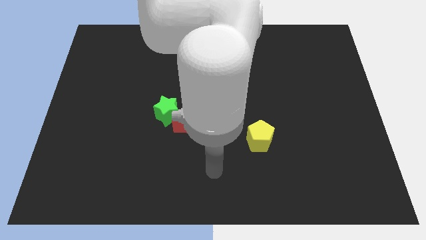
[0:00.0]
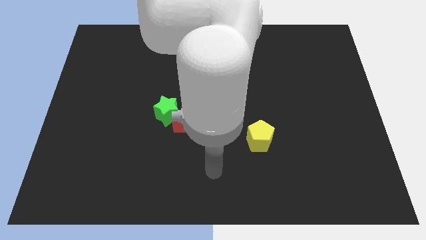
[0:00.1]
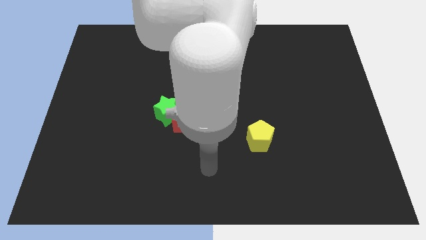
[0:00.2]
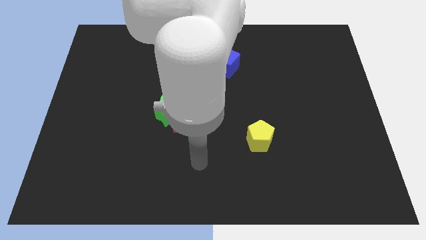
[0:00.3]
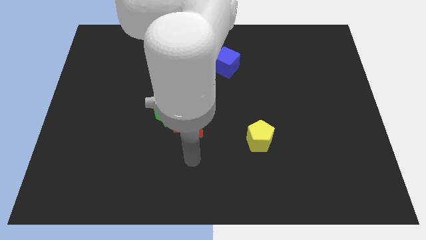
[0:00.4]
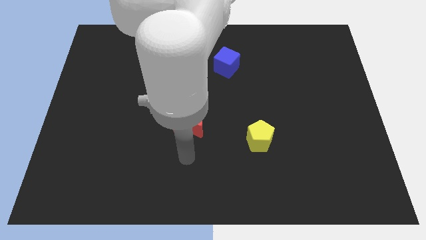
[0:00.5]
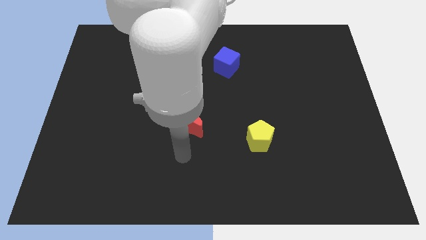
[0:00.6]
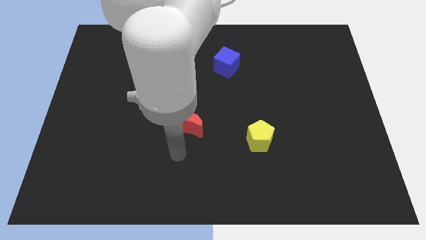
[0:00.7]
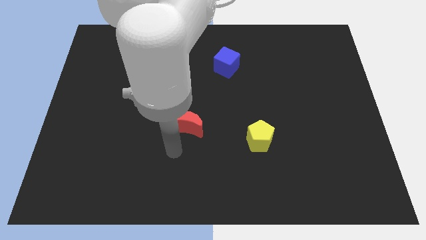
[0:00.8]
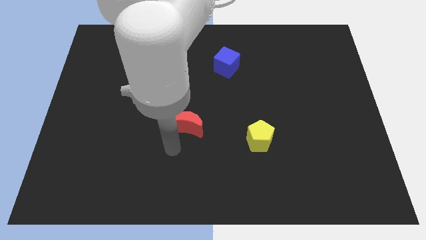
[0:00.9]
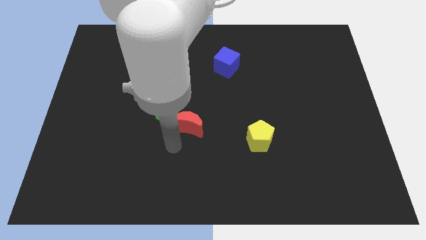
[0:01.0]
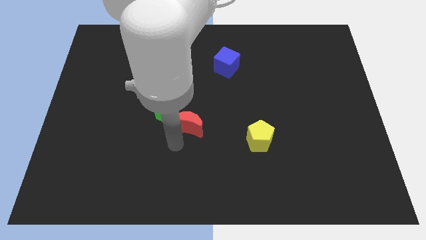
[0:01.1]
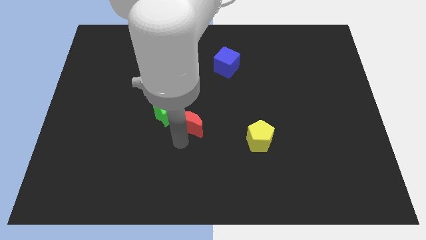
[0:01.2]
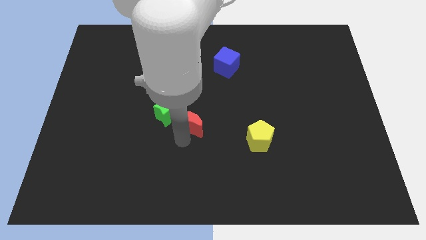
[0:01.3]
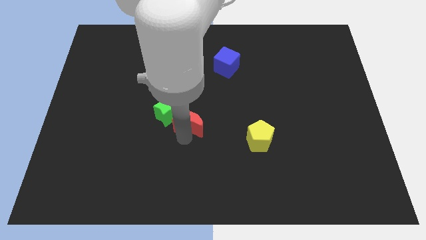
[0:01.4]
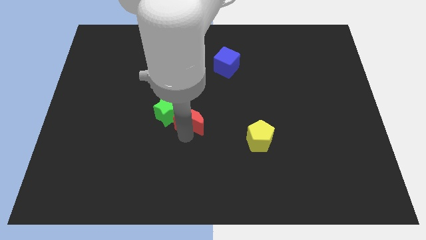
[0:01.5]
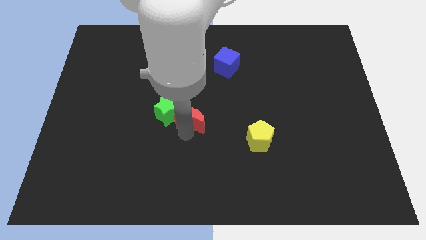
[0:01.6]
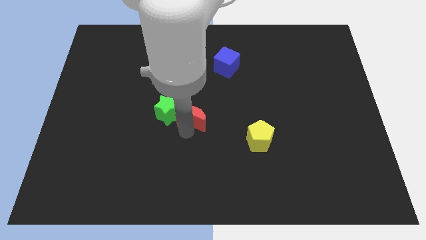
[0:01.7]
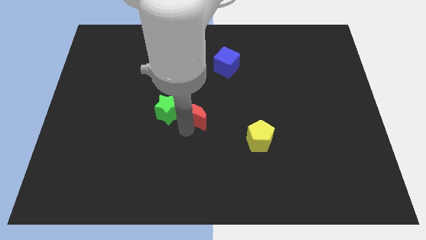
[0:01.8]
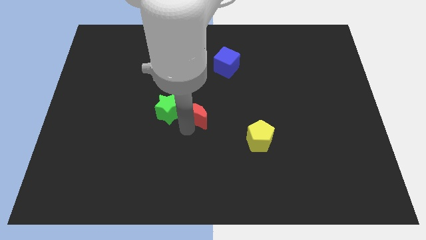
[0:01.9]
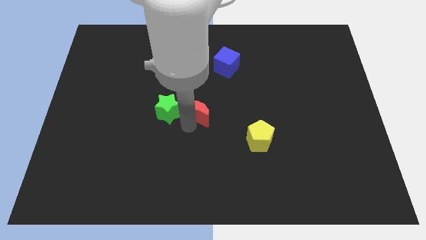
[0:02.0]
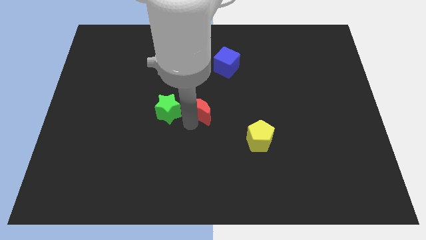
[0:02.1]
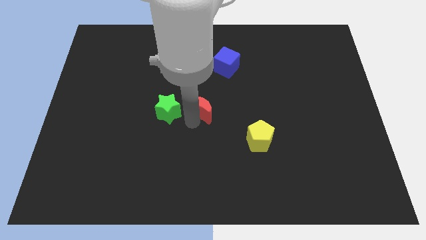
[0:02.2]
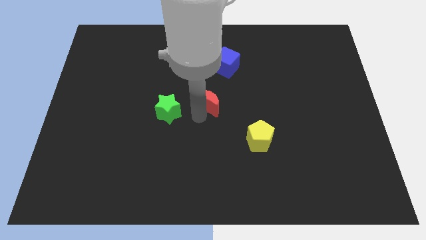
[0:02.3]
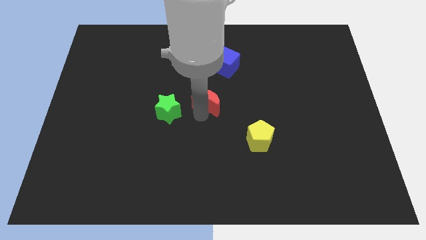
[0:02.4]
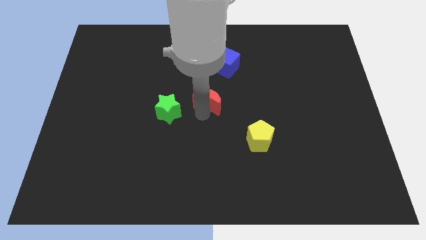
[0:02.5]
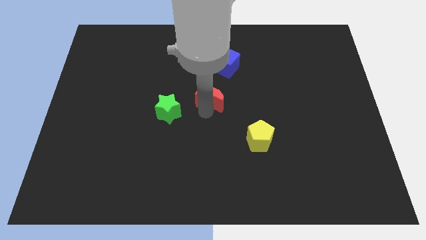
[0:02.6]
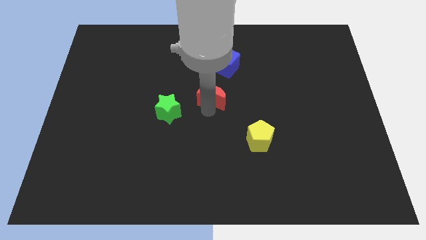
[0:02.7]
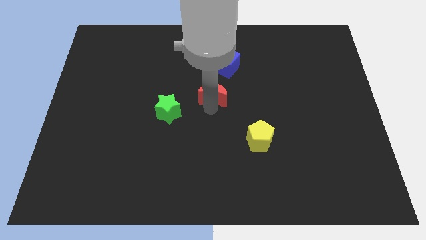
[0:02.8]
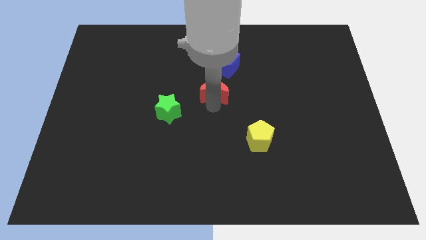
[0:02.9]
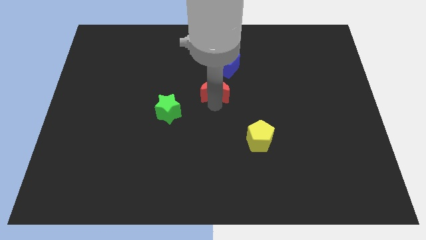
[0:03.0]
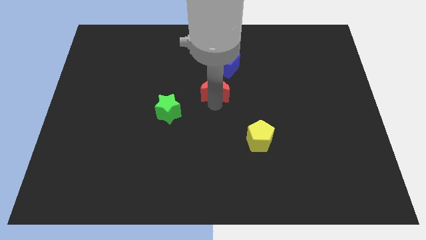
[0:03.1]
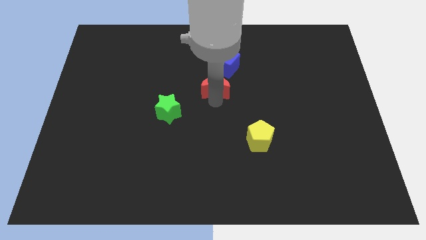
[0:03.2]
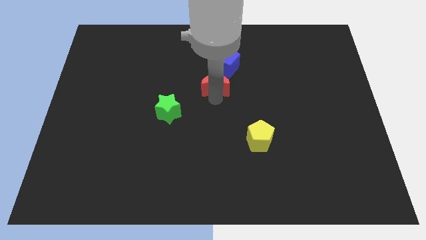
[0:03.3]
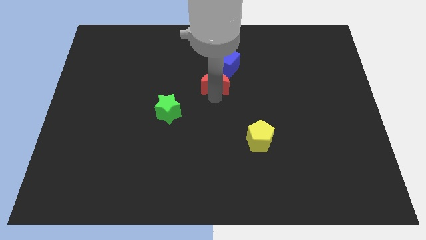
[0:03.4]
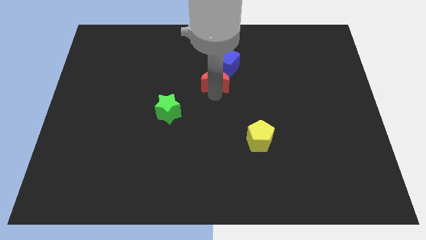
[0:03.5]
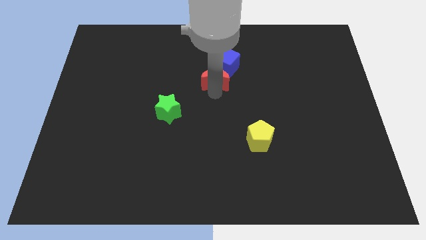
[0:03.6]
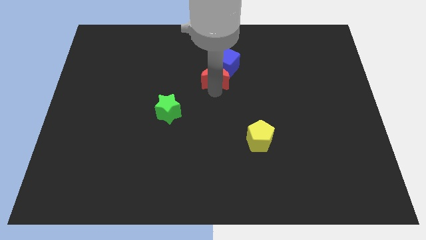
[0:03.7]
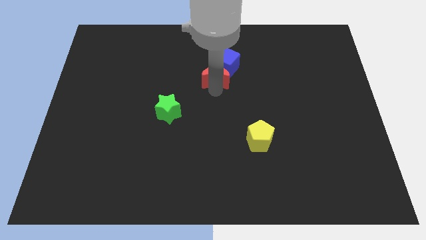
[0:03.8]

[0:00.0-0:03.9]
slide the moon to the blue block

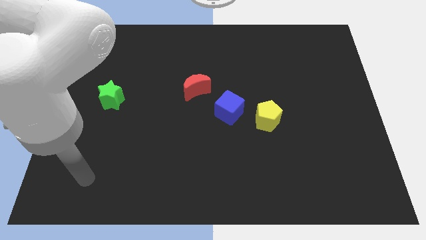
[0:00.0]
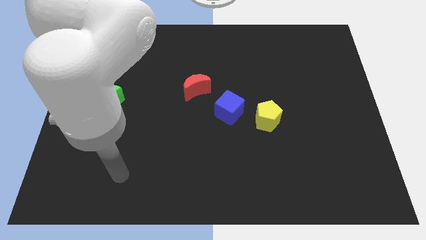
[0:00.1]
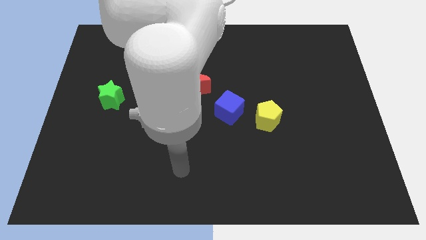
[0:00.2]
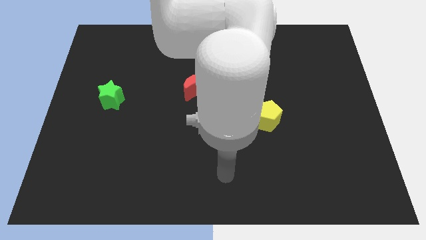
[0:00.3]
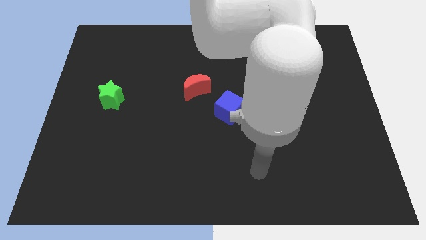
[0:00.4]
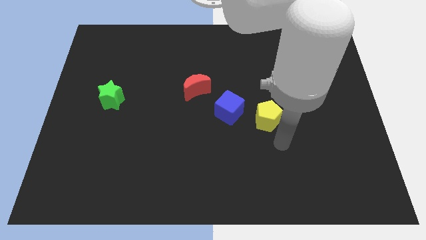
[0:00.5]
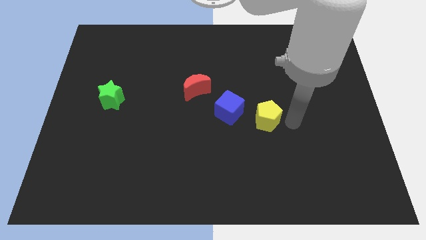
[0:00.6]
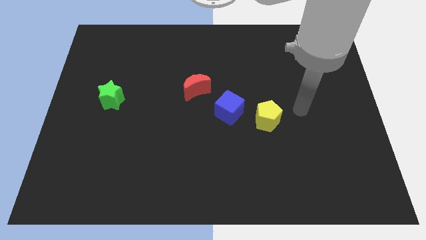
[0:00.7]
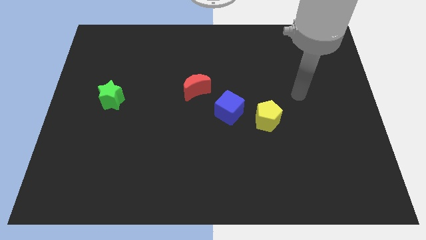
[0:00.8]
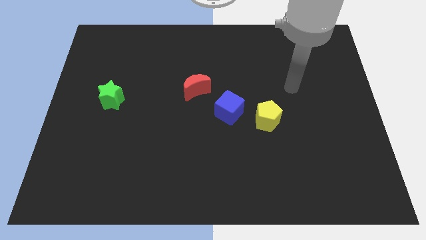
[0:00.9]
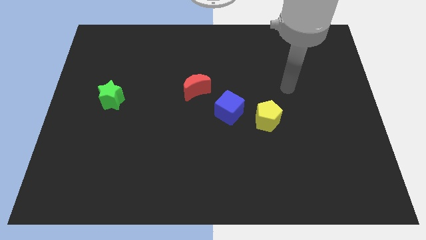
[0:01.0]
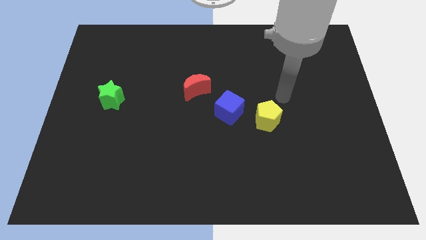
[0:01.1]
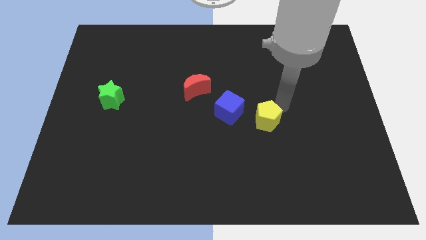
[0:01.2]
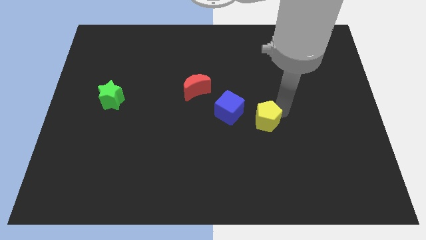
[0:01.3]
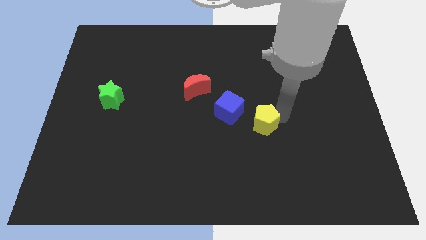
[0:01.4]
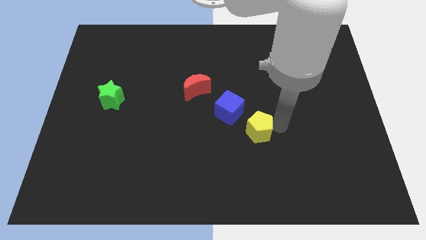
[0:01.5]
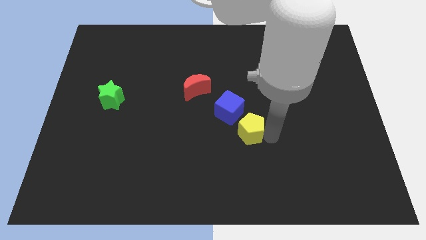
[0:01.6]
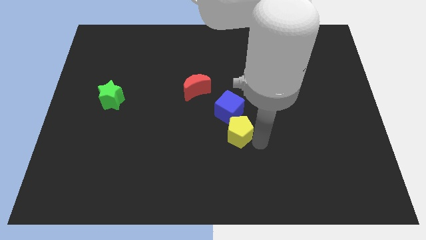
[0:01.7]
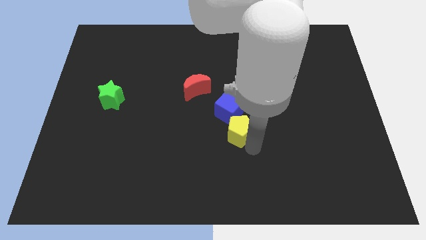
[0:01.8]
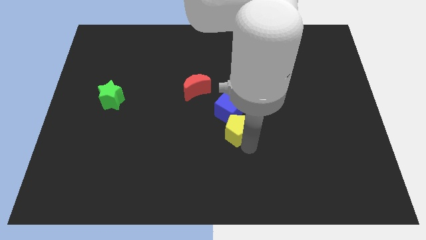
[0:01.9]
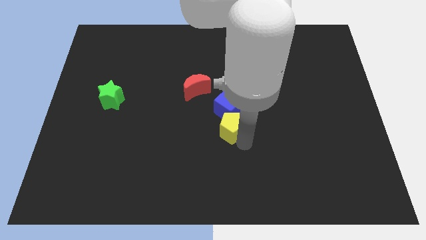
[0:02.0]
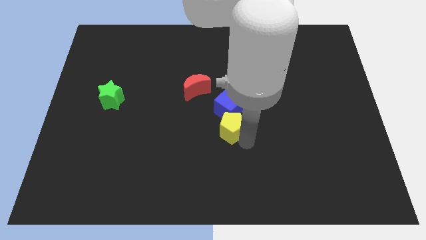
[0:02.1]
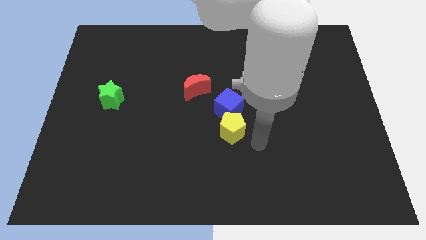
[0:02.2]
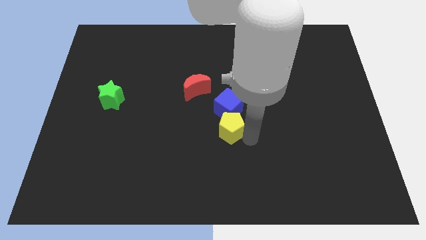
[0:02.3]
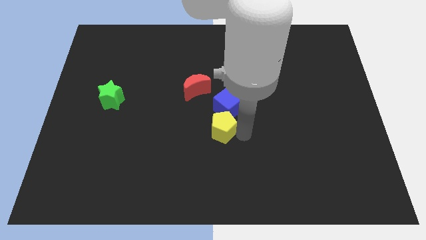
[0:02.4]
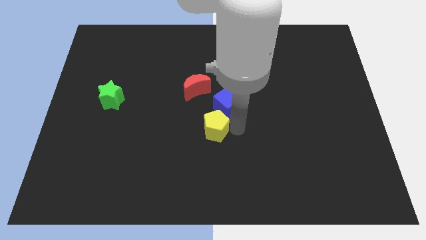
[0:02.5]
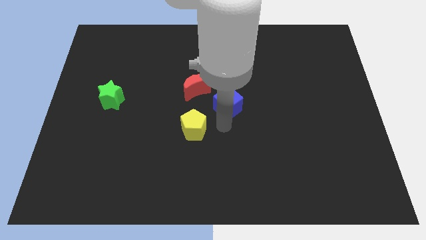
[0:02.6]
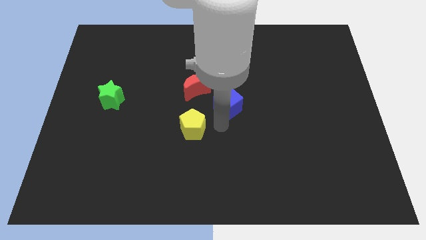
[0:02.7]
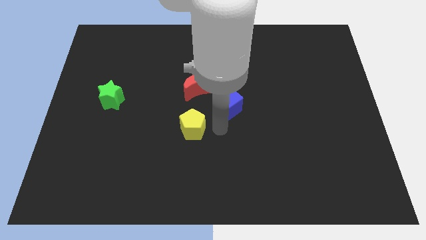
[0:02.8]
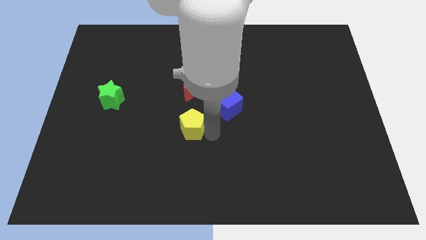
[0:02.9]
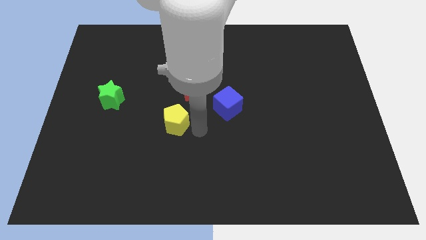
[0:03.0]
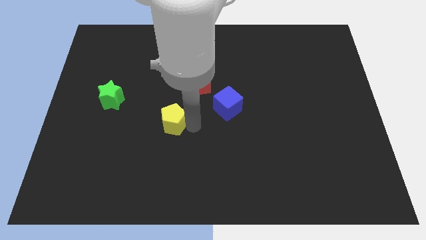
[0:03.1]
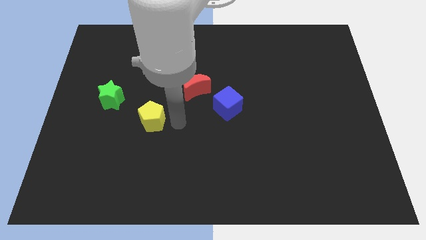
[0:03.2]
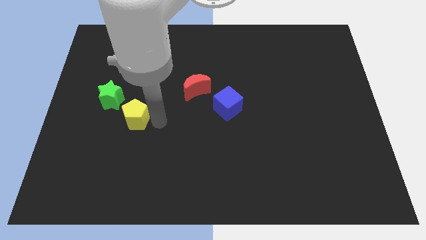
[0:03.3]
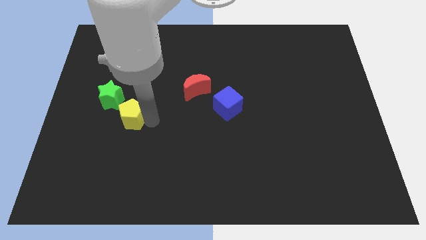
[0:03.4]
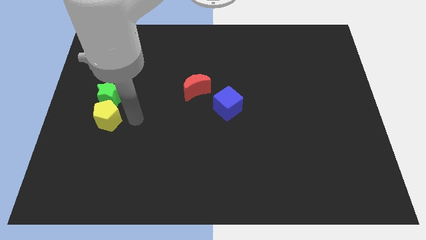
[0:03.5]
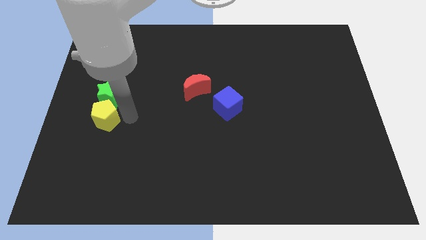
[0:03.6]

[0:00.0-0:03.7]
push the pentagon to the green block

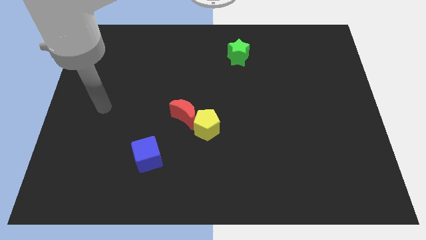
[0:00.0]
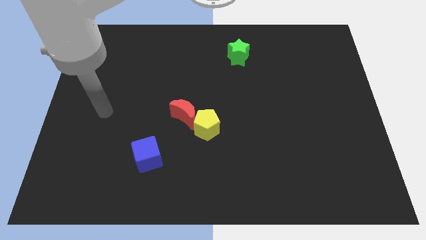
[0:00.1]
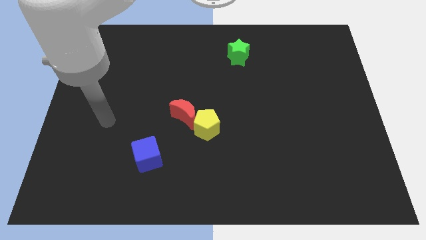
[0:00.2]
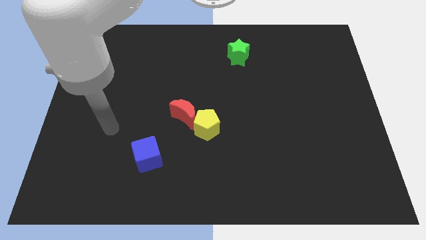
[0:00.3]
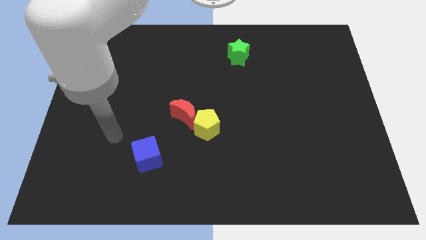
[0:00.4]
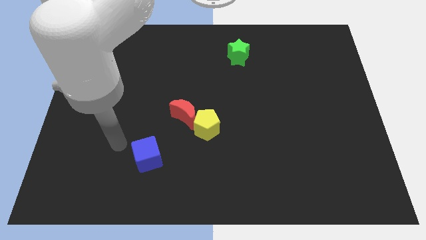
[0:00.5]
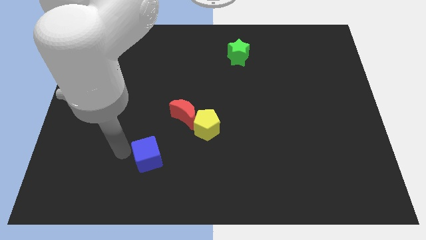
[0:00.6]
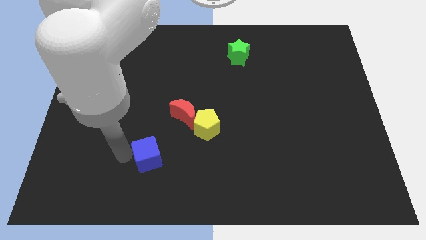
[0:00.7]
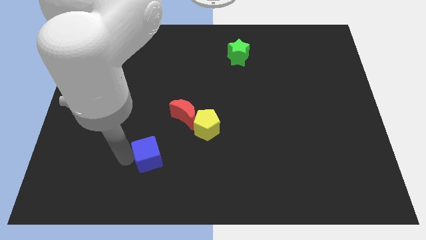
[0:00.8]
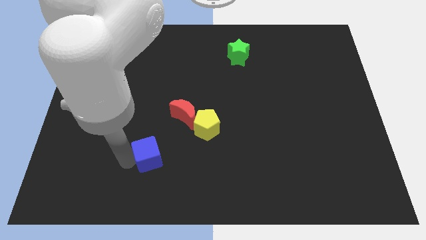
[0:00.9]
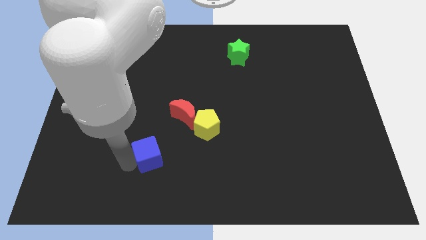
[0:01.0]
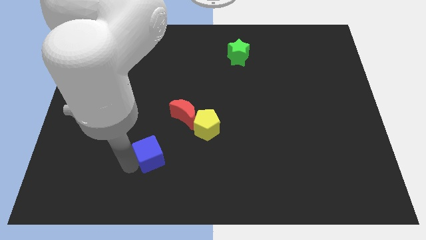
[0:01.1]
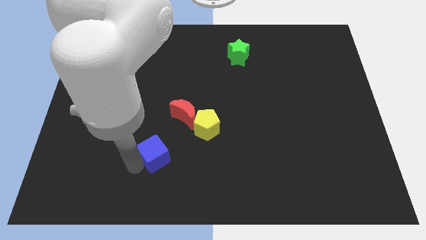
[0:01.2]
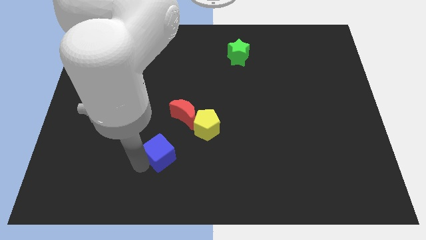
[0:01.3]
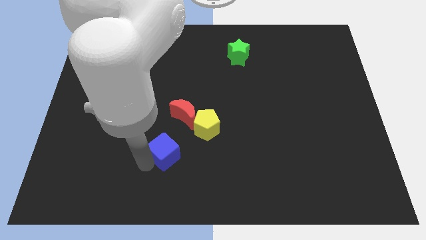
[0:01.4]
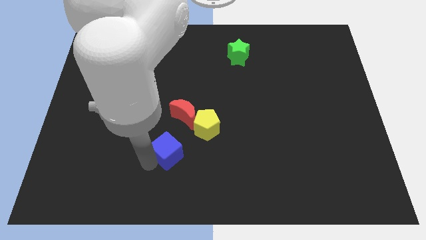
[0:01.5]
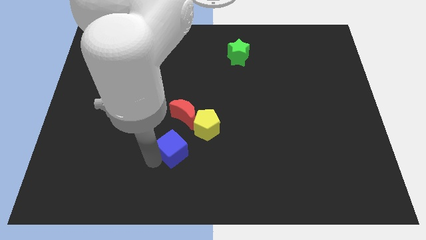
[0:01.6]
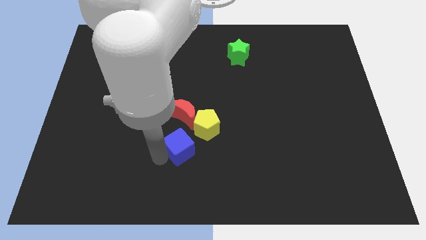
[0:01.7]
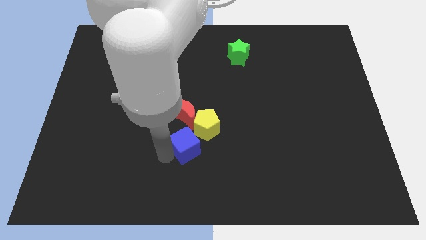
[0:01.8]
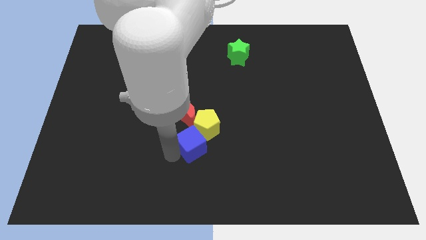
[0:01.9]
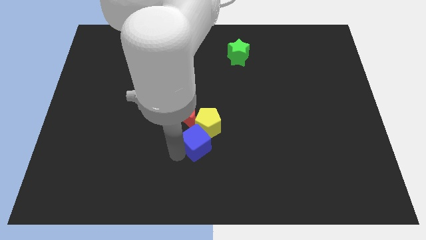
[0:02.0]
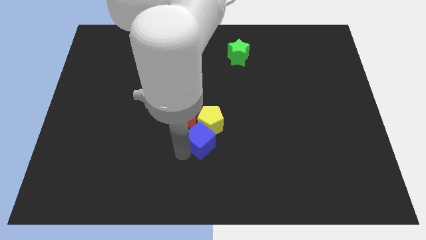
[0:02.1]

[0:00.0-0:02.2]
push the blue block close to the yellow block
